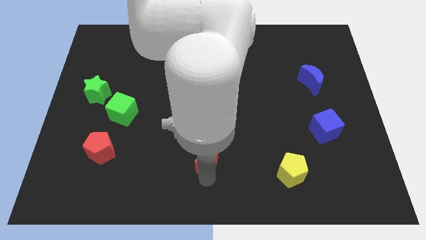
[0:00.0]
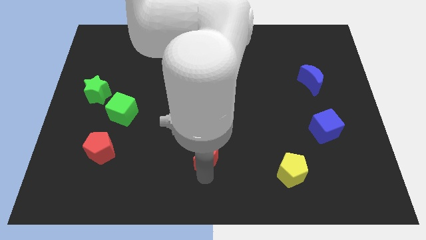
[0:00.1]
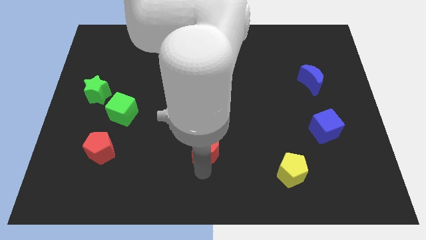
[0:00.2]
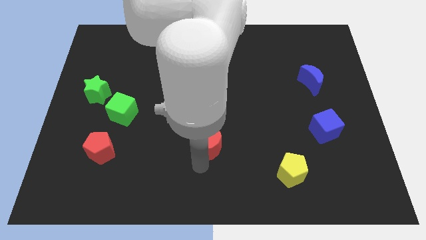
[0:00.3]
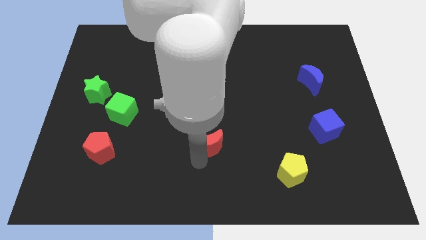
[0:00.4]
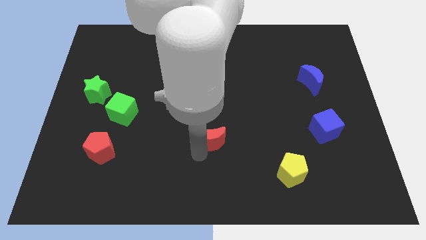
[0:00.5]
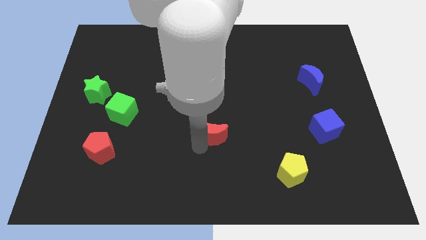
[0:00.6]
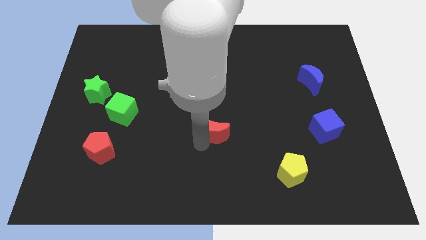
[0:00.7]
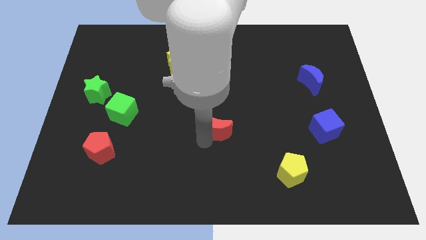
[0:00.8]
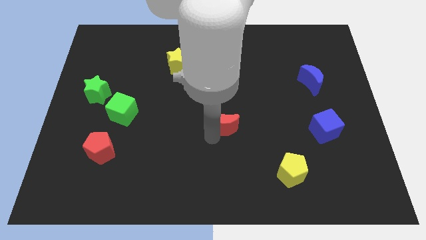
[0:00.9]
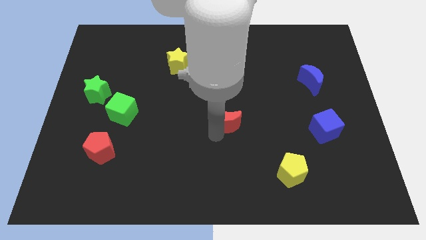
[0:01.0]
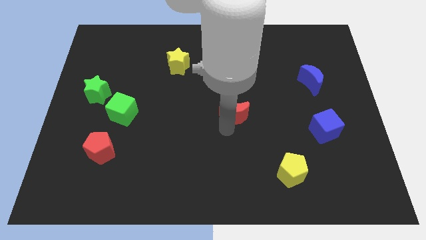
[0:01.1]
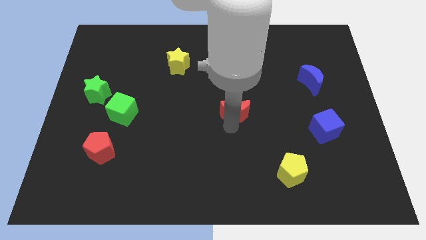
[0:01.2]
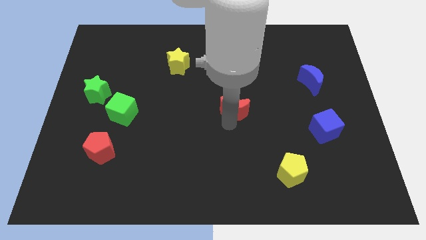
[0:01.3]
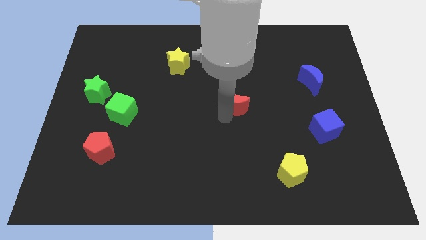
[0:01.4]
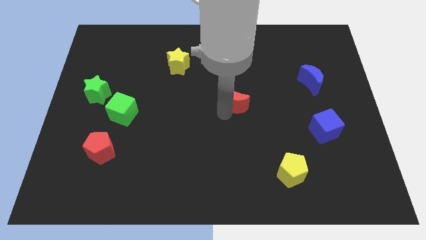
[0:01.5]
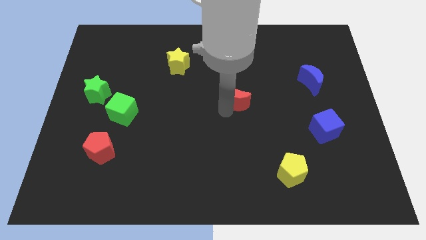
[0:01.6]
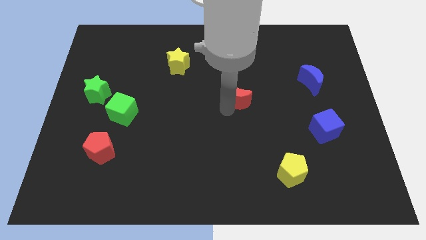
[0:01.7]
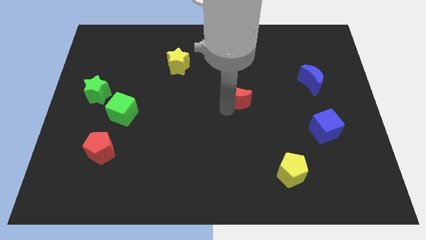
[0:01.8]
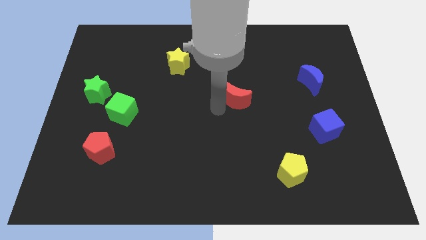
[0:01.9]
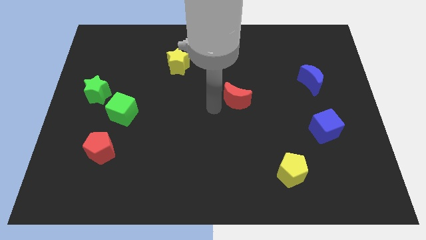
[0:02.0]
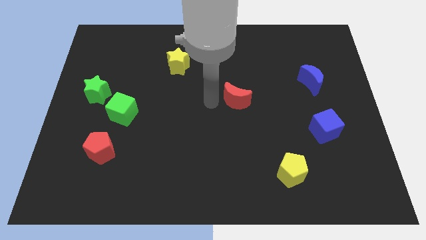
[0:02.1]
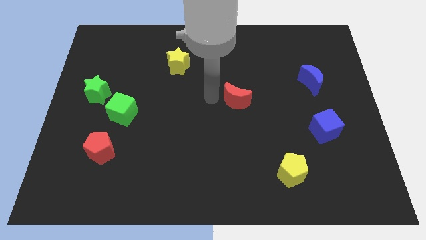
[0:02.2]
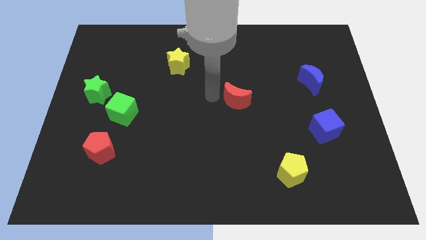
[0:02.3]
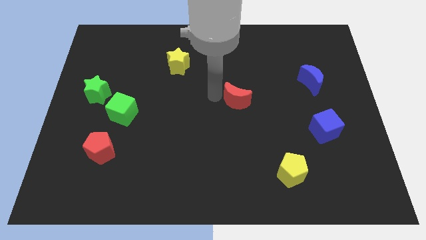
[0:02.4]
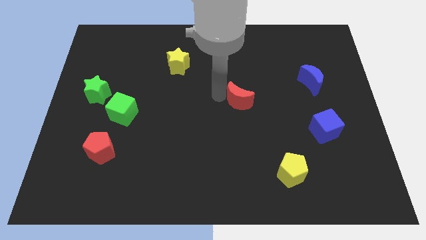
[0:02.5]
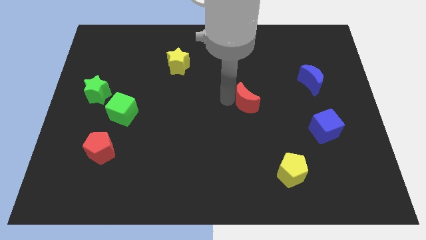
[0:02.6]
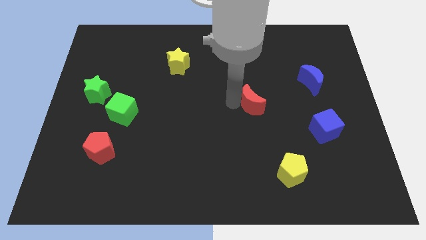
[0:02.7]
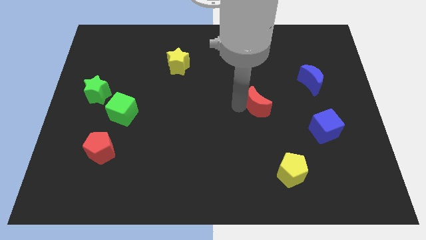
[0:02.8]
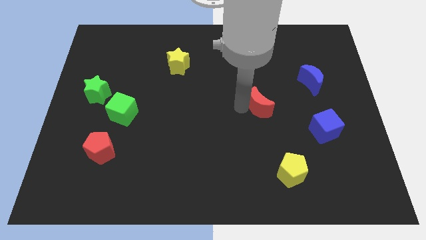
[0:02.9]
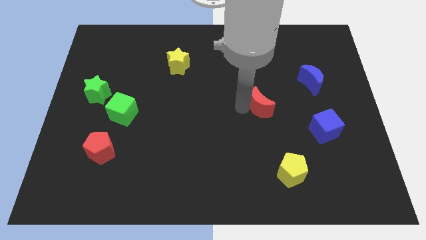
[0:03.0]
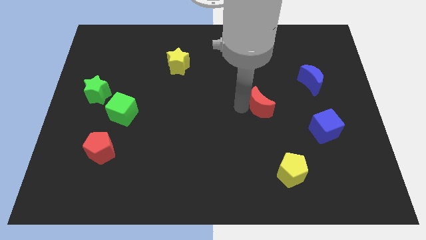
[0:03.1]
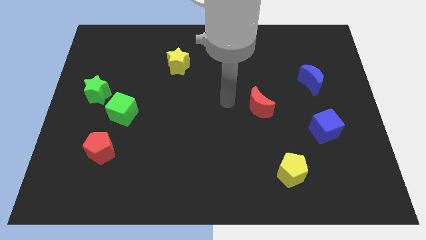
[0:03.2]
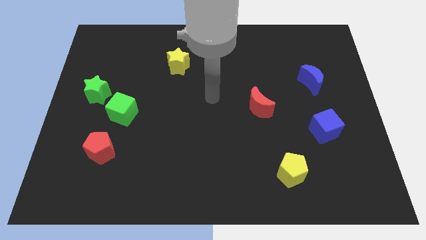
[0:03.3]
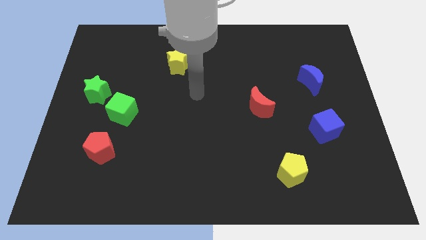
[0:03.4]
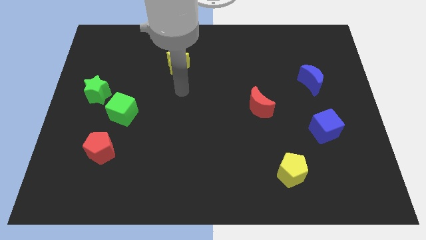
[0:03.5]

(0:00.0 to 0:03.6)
place the red moon diagonally top left to the yellow pentagon

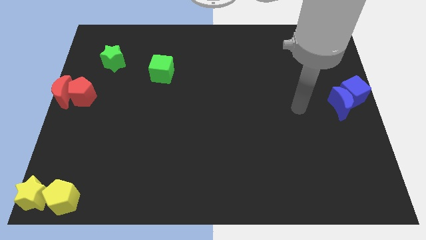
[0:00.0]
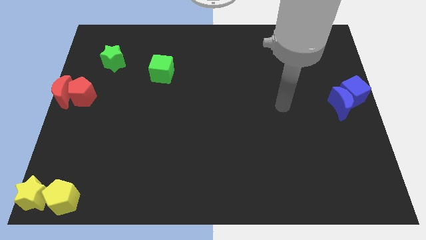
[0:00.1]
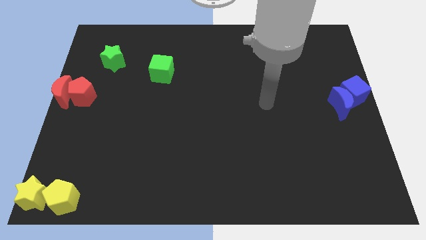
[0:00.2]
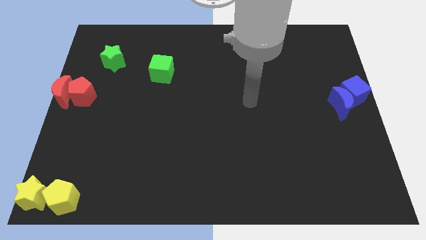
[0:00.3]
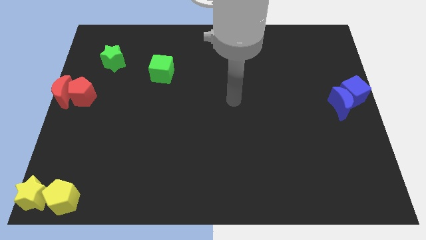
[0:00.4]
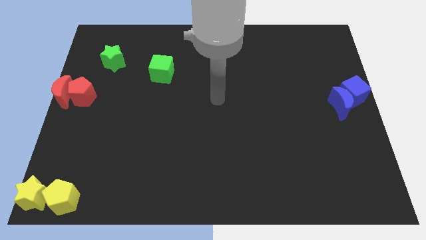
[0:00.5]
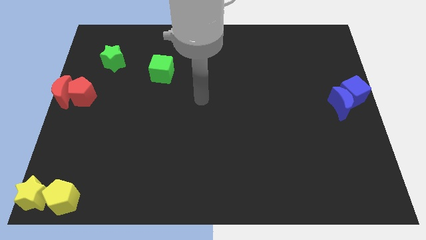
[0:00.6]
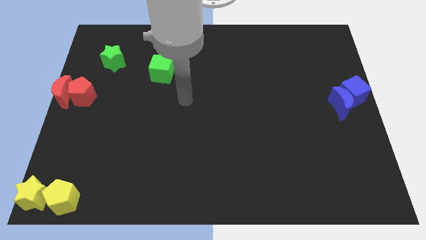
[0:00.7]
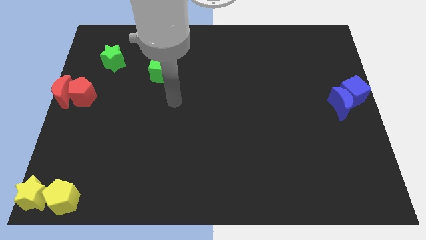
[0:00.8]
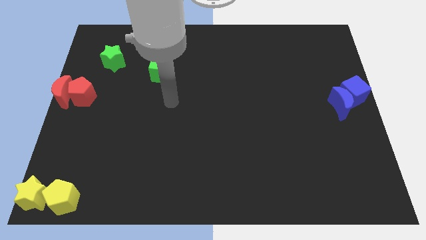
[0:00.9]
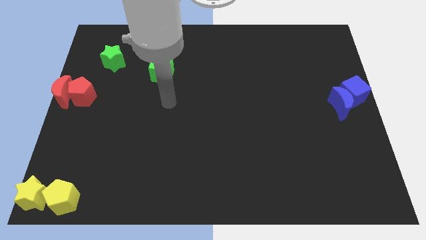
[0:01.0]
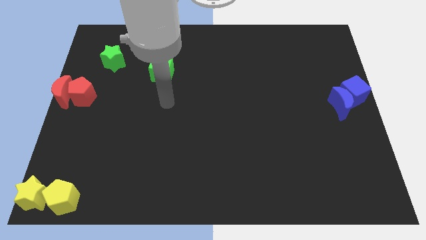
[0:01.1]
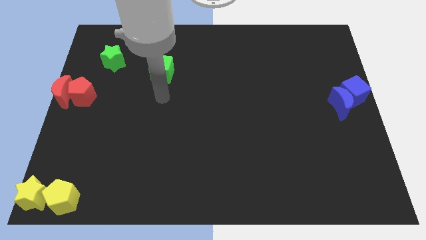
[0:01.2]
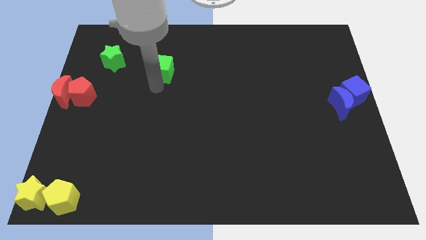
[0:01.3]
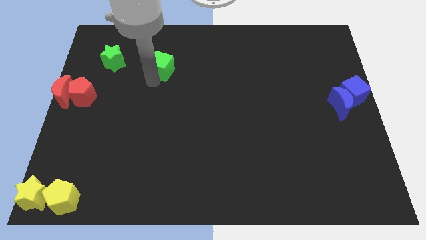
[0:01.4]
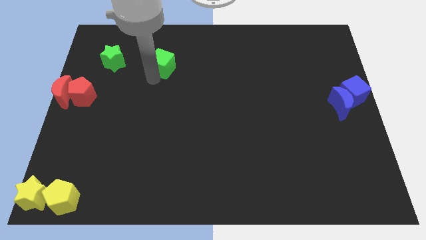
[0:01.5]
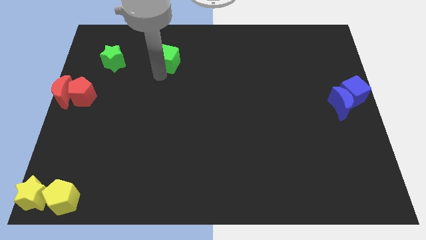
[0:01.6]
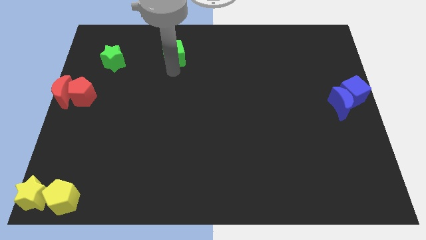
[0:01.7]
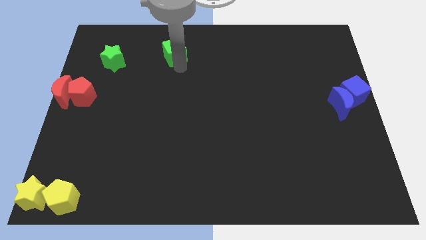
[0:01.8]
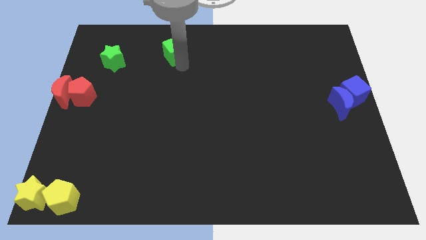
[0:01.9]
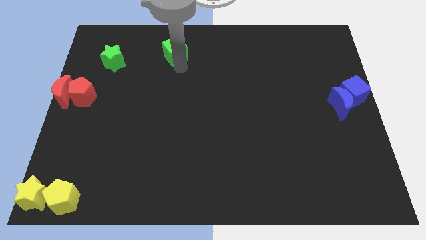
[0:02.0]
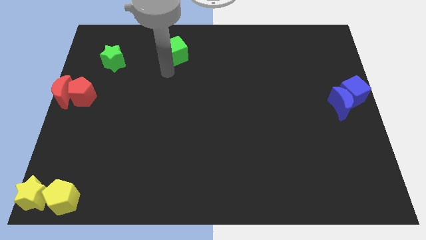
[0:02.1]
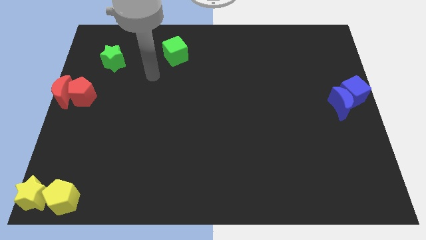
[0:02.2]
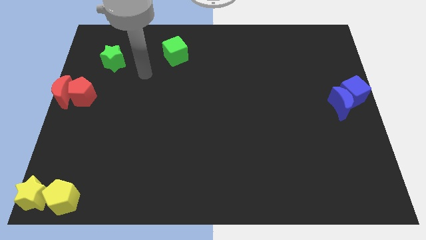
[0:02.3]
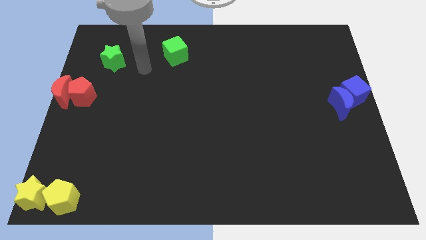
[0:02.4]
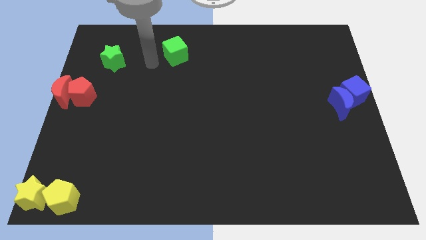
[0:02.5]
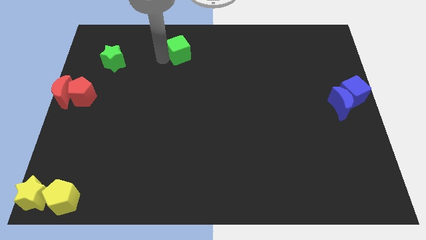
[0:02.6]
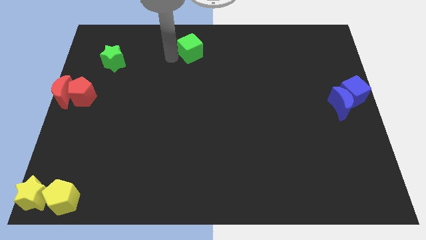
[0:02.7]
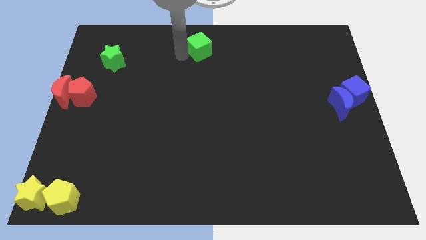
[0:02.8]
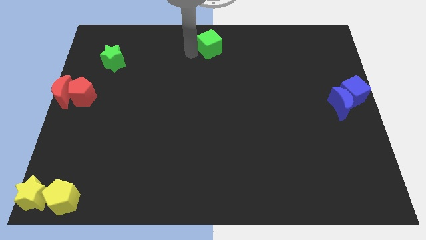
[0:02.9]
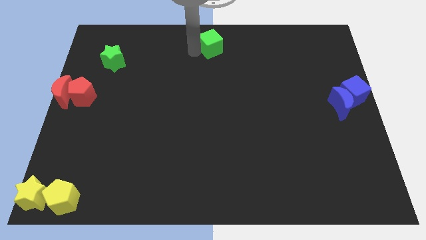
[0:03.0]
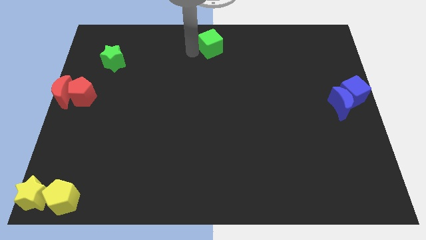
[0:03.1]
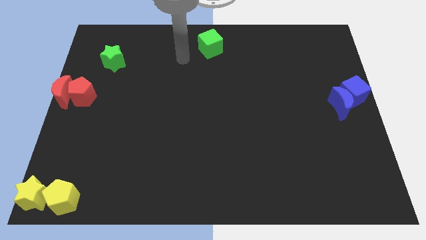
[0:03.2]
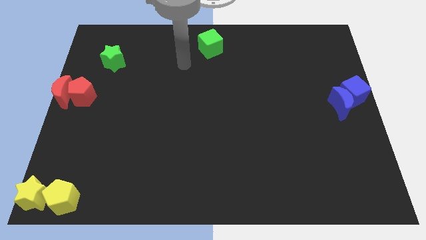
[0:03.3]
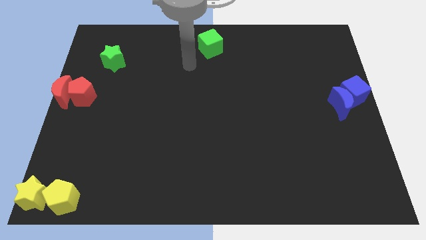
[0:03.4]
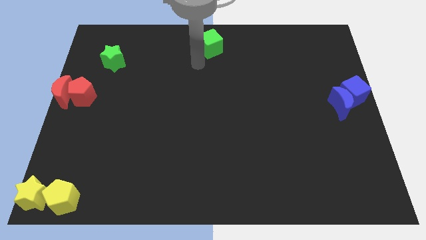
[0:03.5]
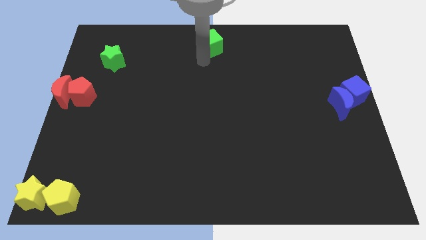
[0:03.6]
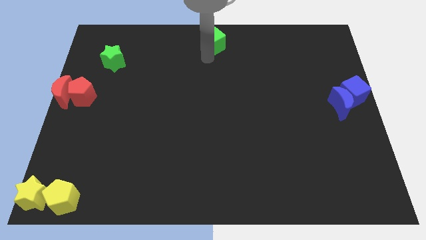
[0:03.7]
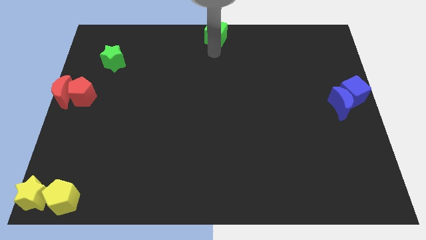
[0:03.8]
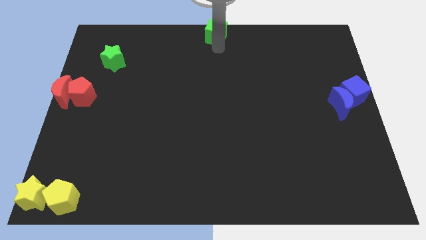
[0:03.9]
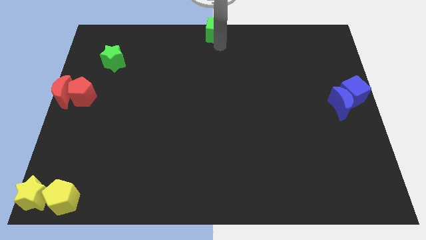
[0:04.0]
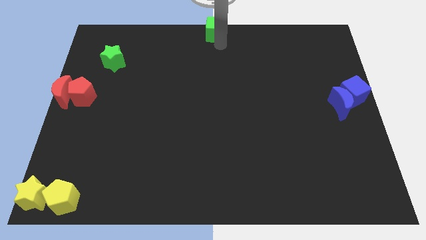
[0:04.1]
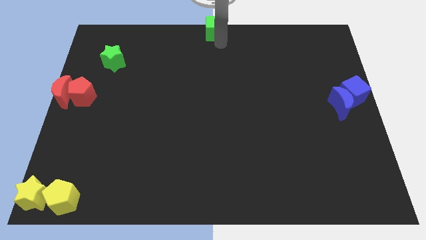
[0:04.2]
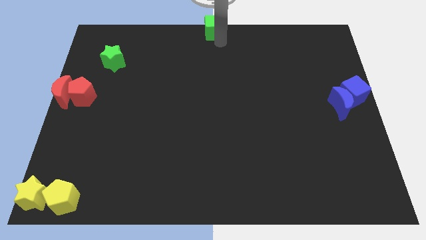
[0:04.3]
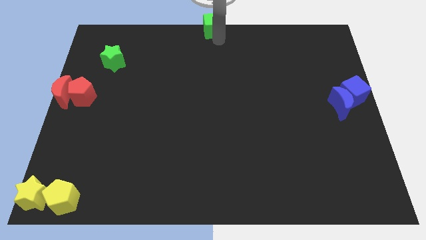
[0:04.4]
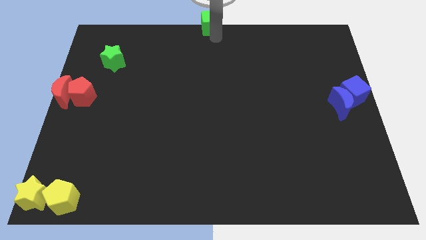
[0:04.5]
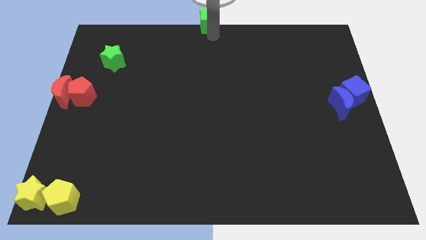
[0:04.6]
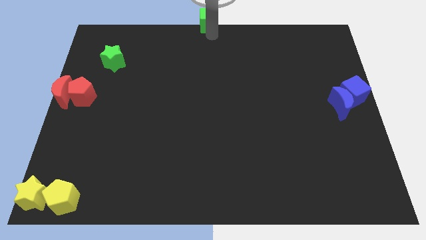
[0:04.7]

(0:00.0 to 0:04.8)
place the green cube on the top center of the board

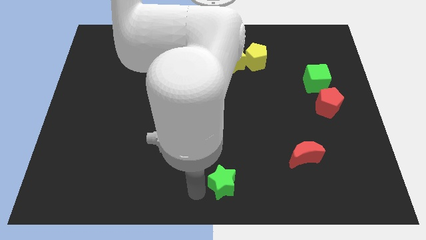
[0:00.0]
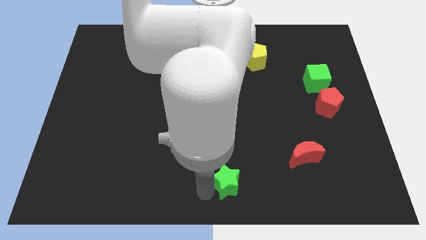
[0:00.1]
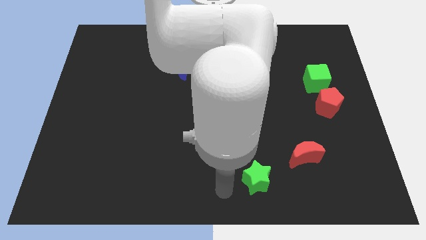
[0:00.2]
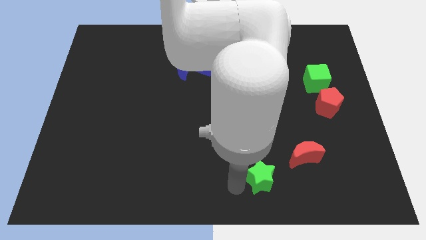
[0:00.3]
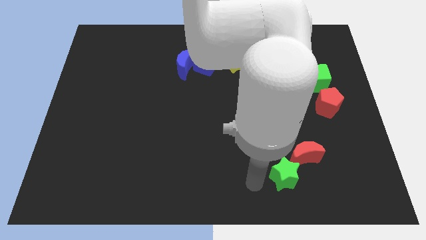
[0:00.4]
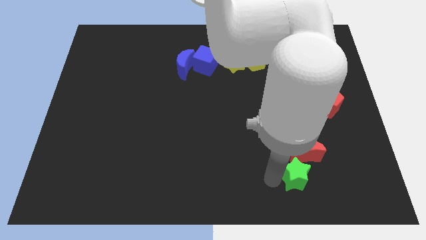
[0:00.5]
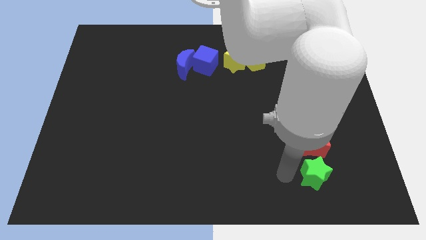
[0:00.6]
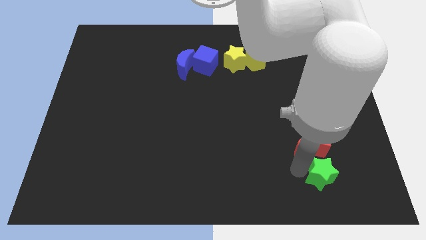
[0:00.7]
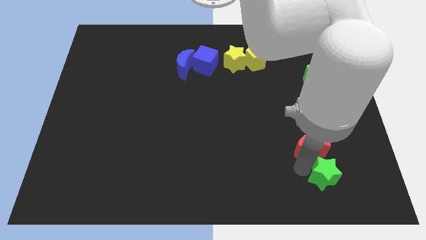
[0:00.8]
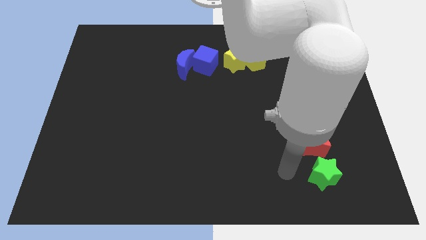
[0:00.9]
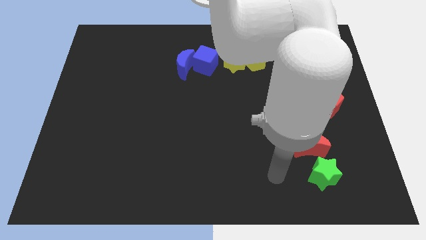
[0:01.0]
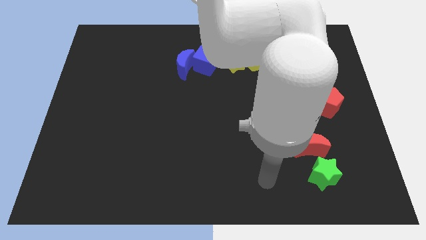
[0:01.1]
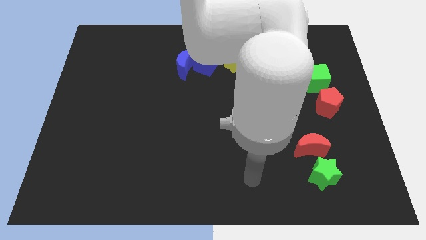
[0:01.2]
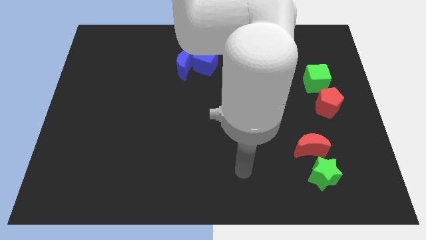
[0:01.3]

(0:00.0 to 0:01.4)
push the green star to the bottom of the red crescent
